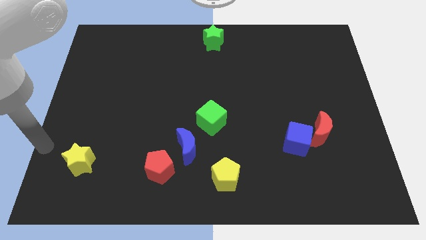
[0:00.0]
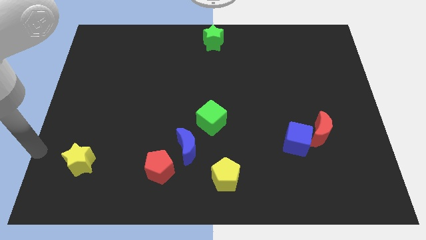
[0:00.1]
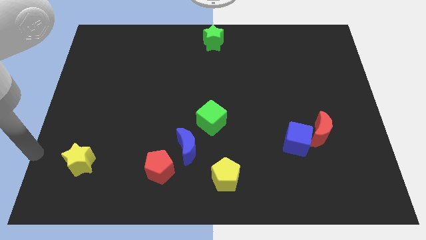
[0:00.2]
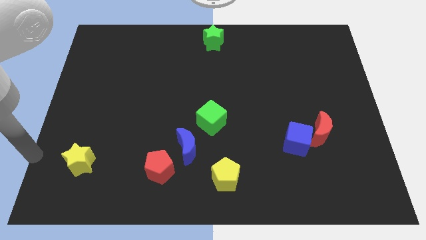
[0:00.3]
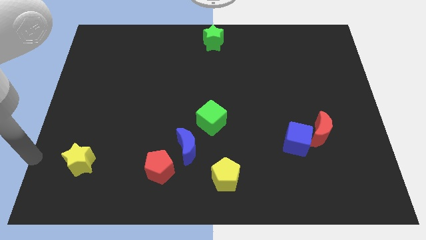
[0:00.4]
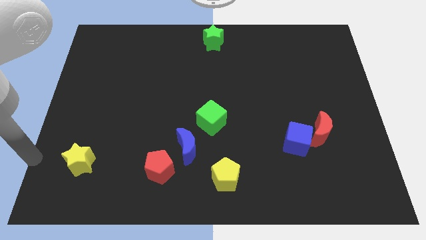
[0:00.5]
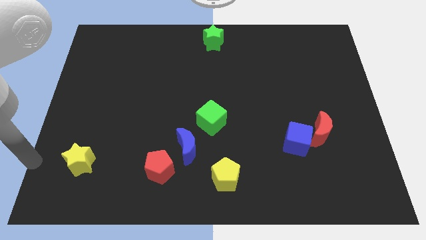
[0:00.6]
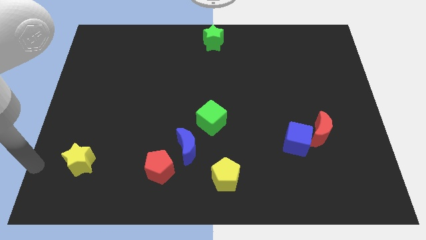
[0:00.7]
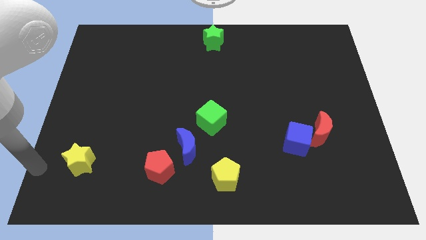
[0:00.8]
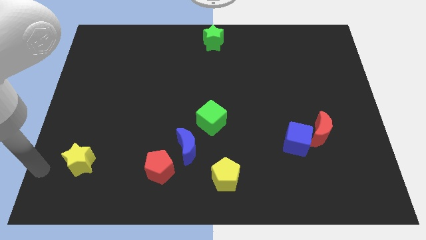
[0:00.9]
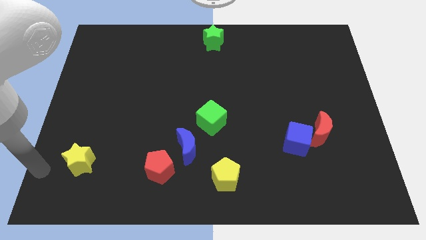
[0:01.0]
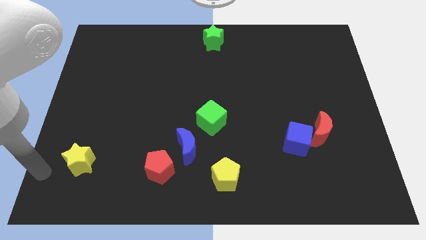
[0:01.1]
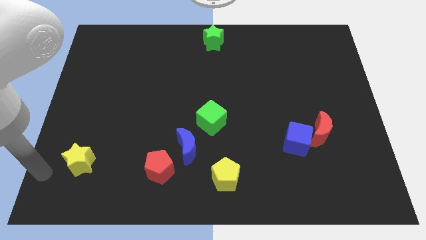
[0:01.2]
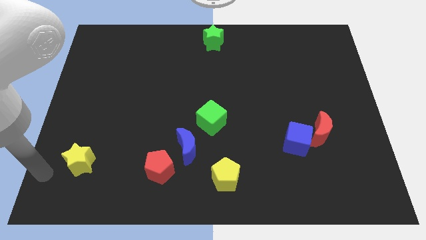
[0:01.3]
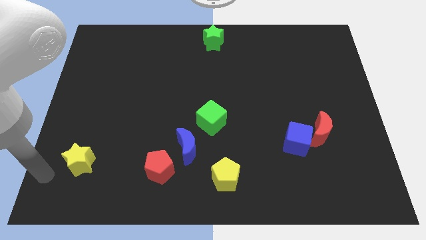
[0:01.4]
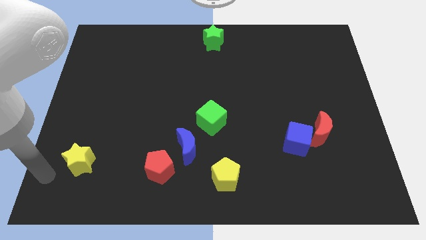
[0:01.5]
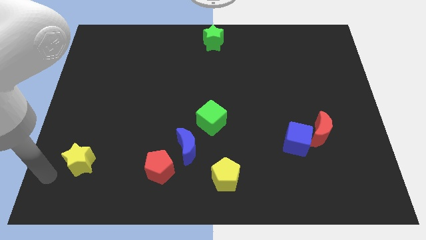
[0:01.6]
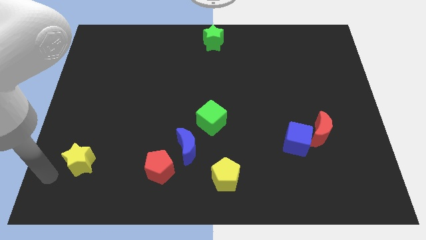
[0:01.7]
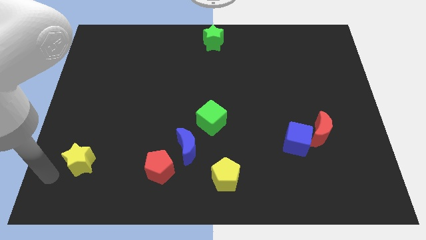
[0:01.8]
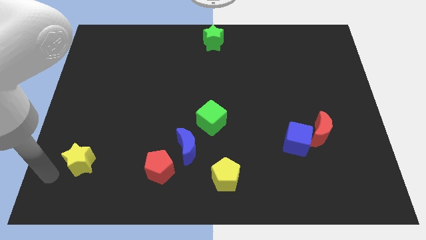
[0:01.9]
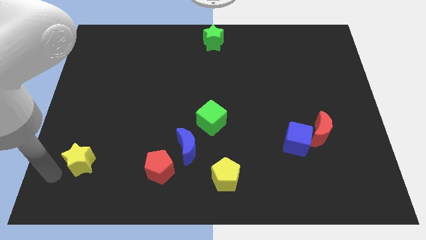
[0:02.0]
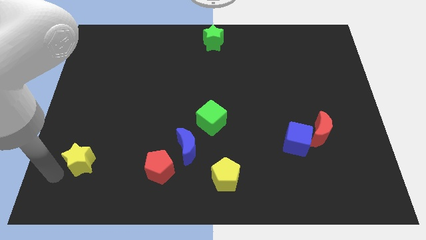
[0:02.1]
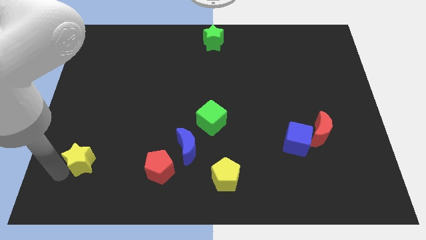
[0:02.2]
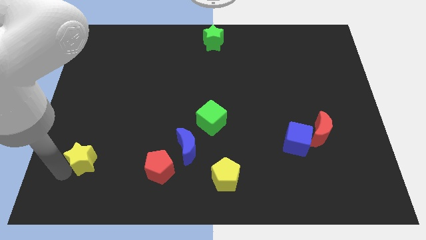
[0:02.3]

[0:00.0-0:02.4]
place the arm near the yellow star

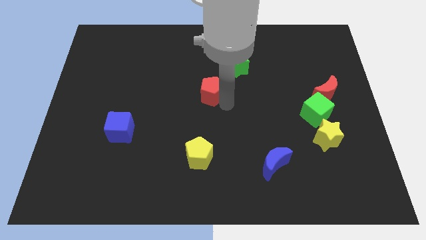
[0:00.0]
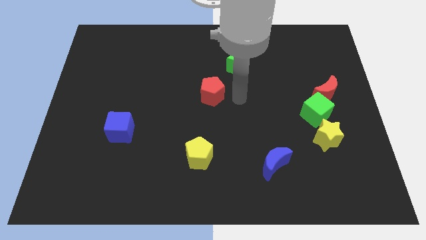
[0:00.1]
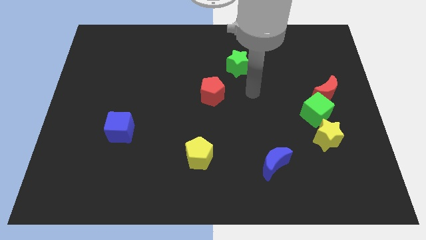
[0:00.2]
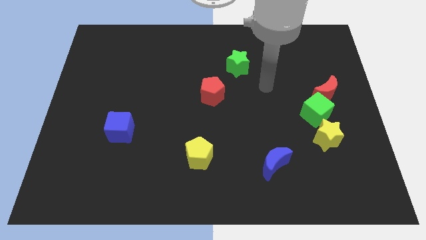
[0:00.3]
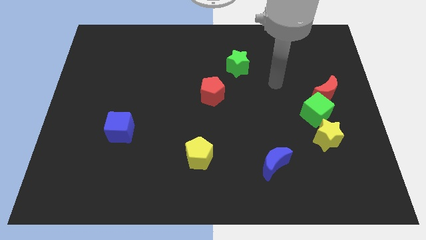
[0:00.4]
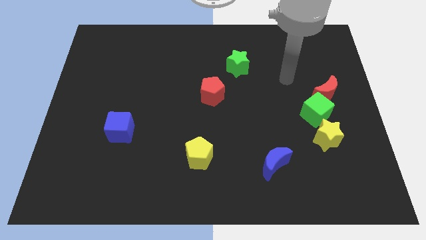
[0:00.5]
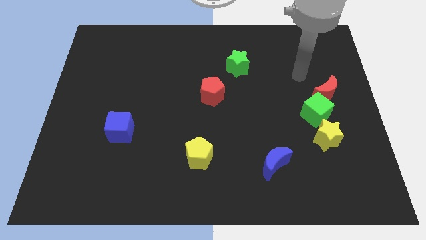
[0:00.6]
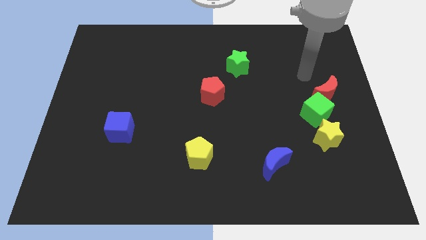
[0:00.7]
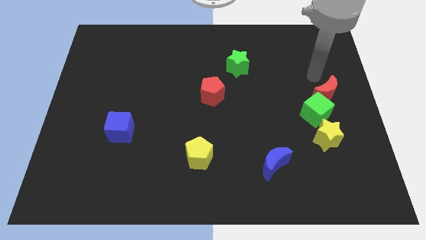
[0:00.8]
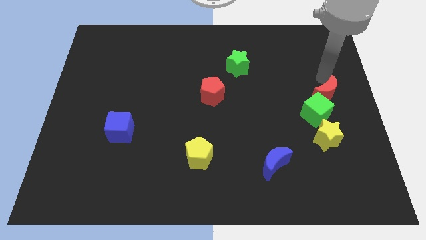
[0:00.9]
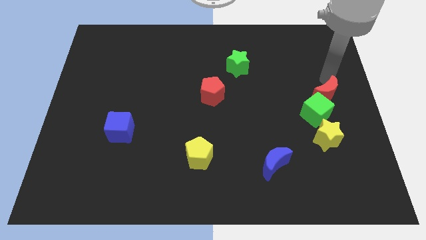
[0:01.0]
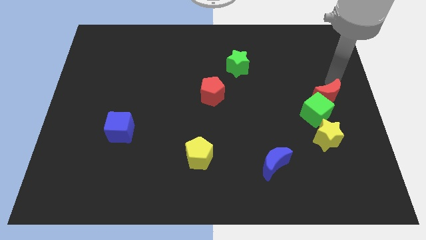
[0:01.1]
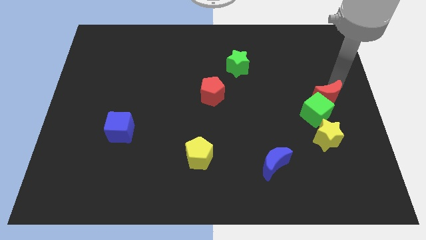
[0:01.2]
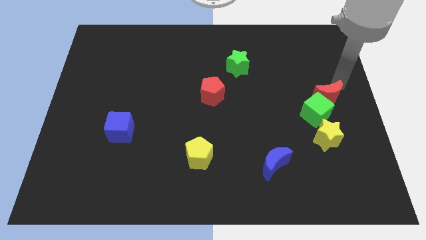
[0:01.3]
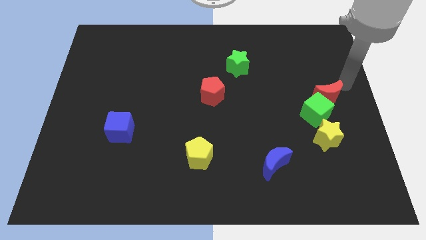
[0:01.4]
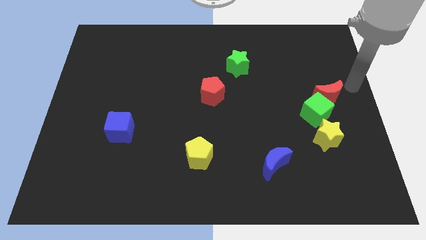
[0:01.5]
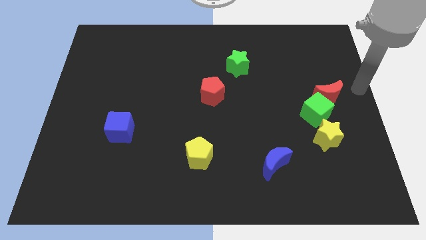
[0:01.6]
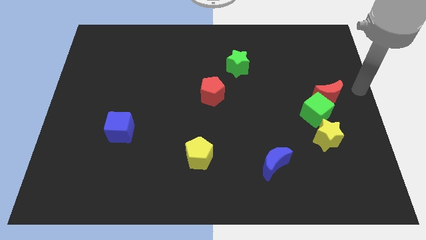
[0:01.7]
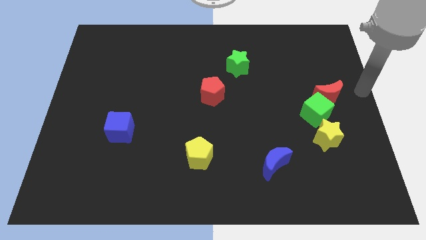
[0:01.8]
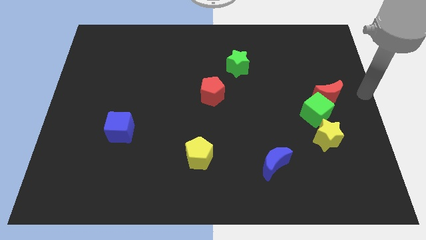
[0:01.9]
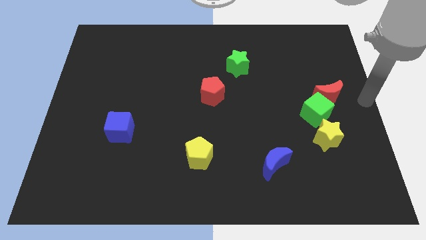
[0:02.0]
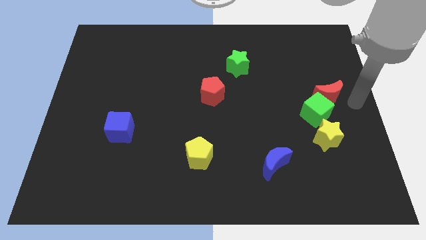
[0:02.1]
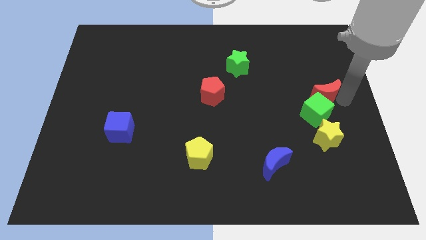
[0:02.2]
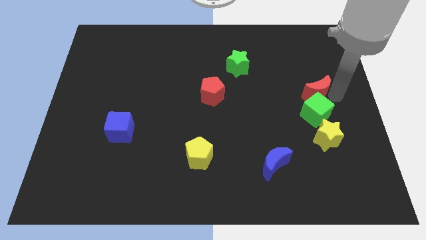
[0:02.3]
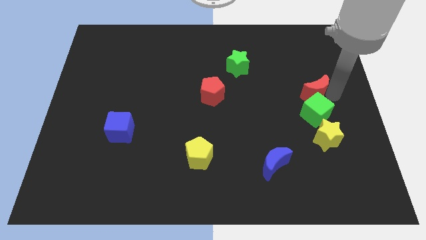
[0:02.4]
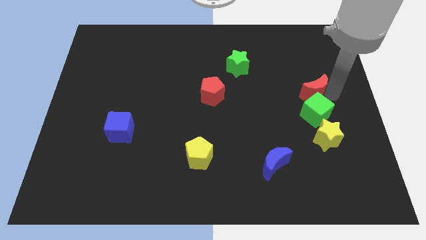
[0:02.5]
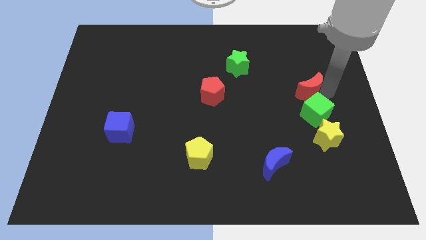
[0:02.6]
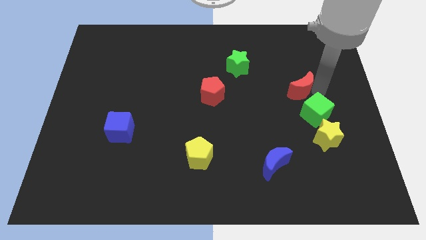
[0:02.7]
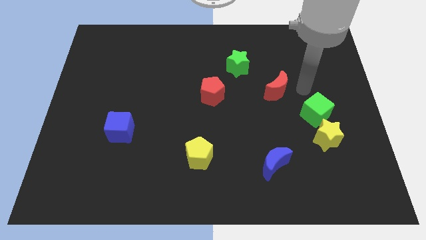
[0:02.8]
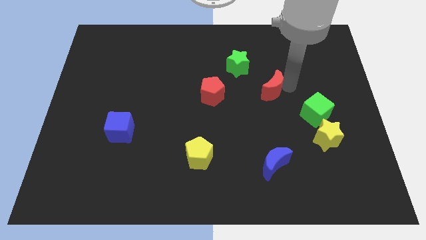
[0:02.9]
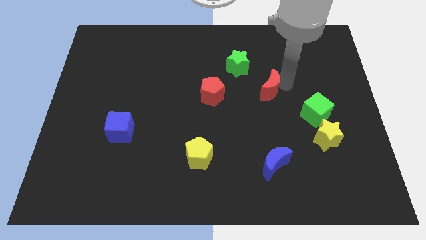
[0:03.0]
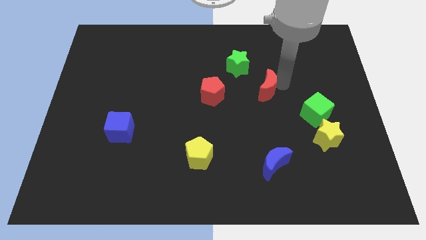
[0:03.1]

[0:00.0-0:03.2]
push the red crescent towards the red pentagon

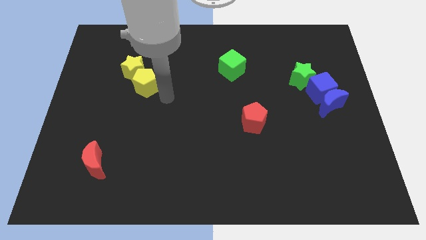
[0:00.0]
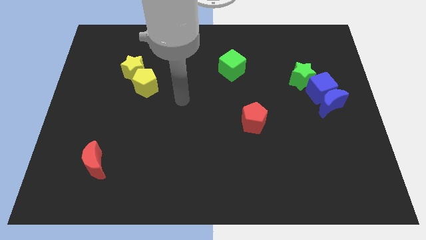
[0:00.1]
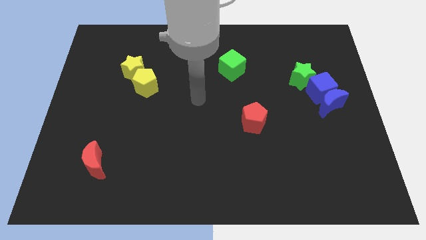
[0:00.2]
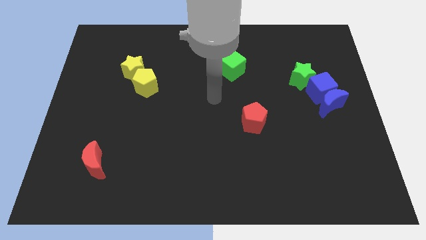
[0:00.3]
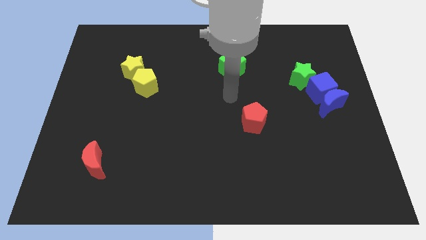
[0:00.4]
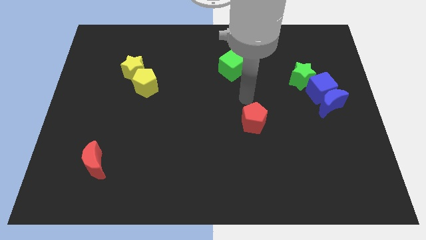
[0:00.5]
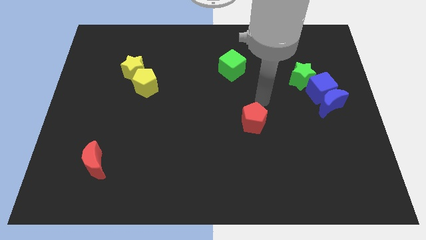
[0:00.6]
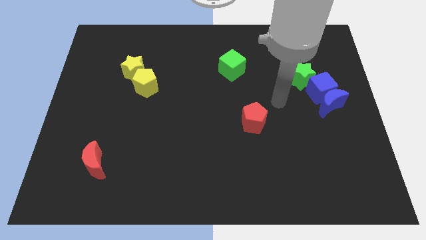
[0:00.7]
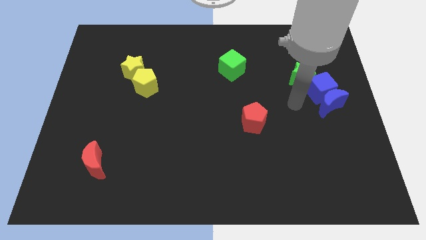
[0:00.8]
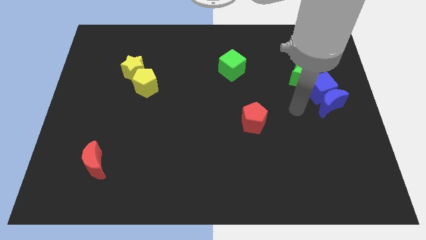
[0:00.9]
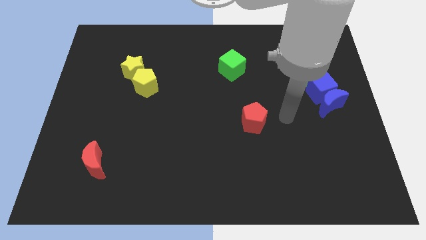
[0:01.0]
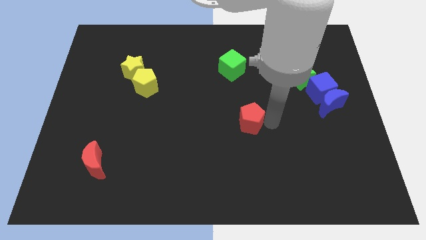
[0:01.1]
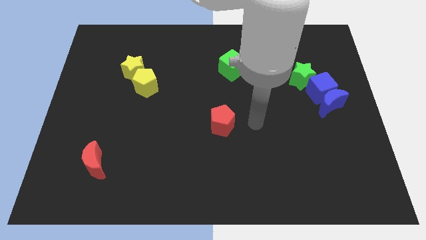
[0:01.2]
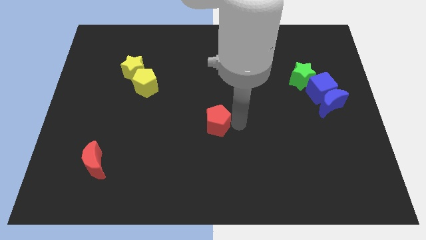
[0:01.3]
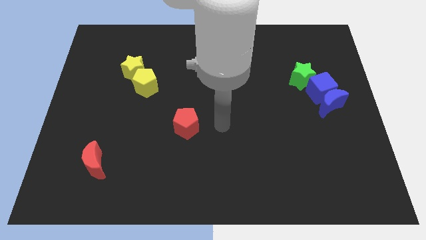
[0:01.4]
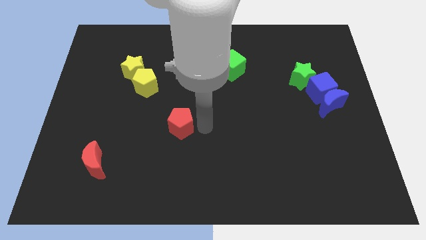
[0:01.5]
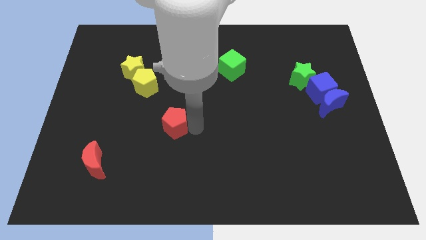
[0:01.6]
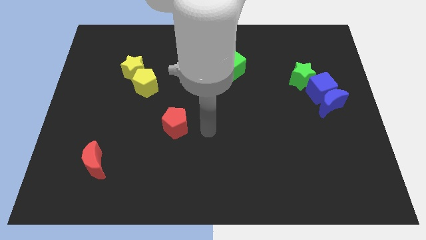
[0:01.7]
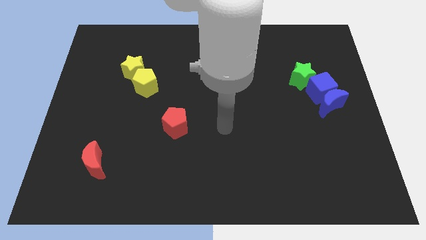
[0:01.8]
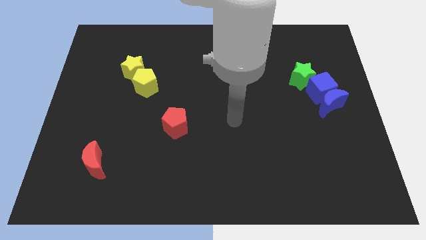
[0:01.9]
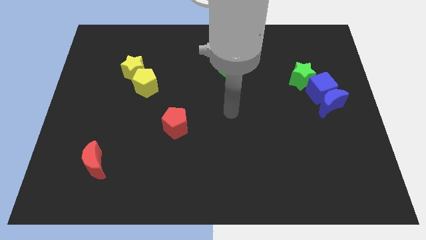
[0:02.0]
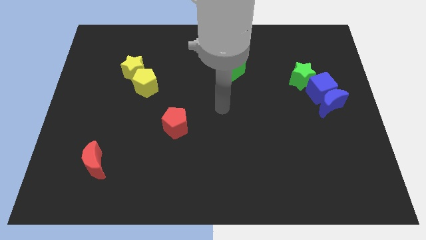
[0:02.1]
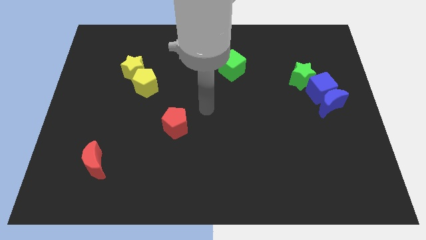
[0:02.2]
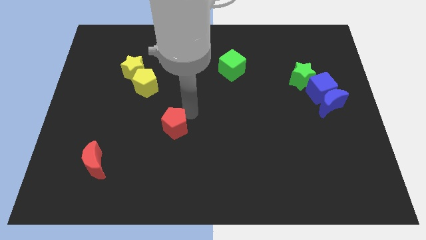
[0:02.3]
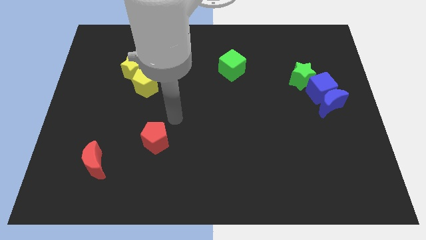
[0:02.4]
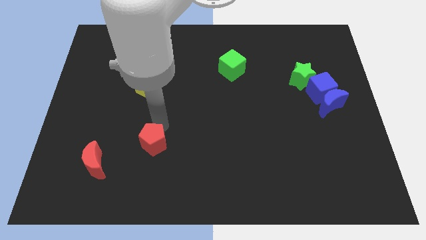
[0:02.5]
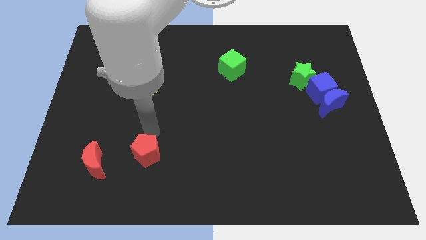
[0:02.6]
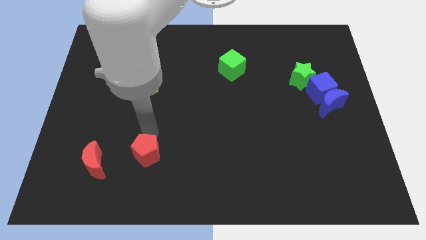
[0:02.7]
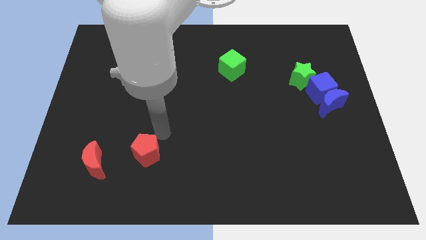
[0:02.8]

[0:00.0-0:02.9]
place the red pentagon diagonally below the green cube

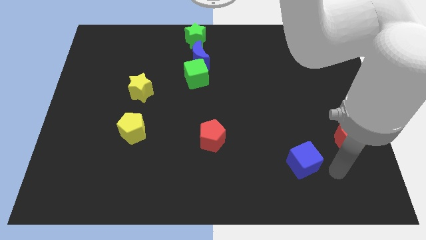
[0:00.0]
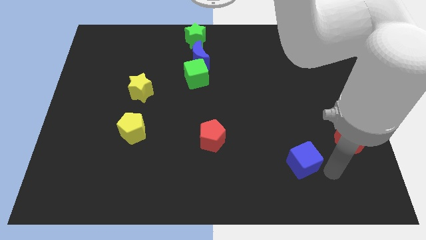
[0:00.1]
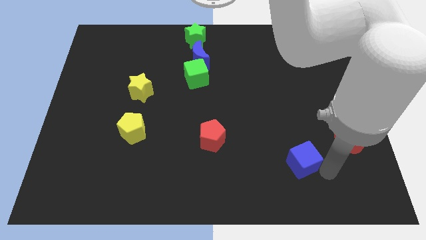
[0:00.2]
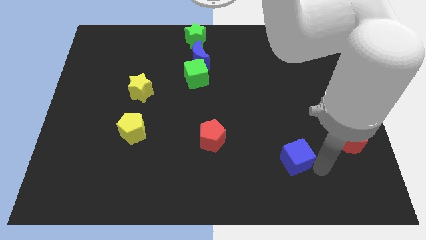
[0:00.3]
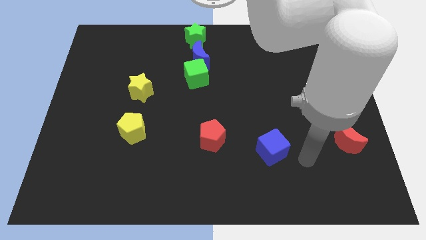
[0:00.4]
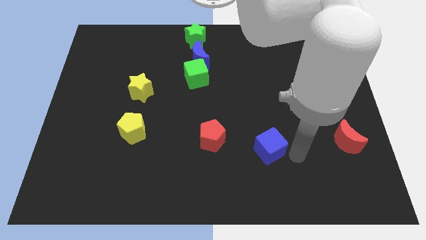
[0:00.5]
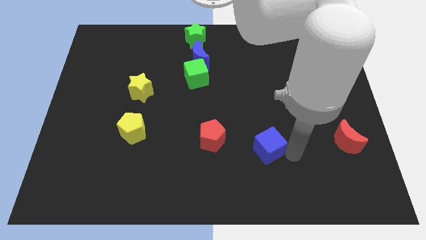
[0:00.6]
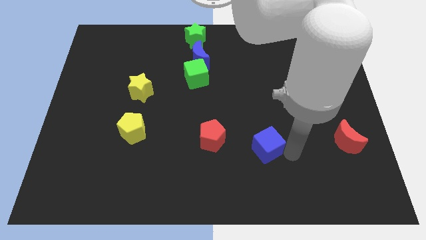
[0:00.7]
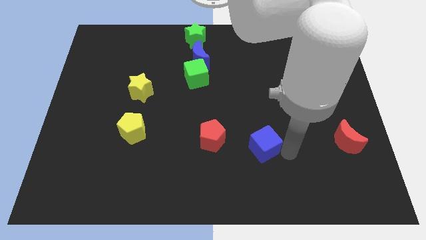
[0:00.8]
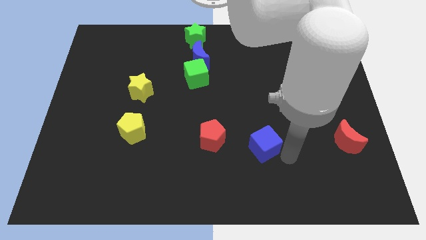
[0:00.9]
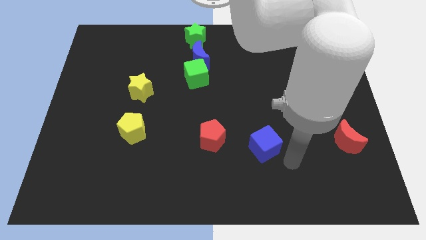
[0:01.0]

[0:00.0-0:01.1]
move blue cube towards red pentagon
